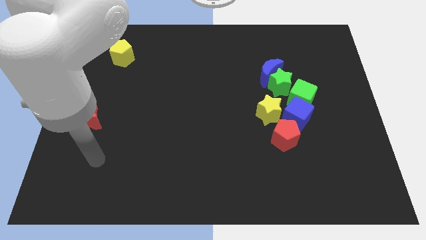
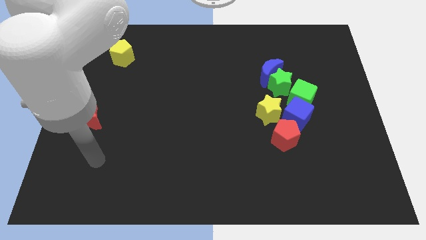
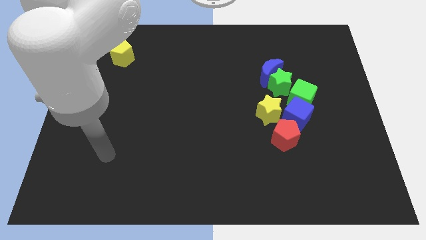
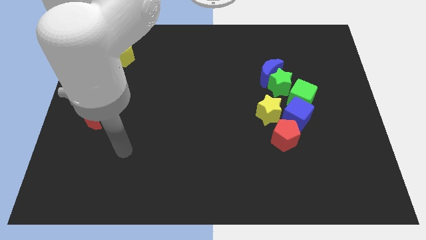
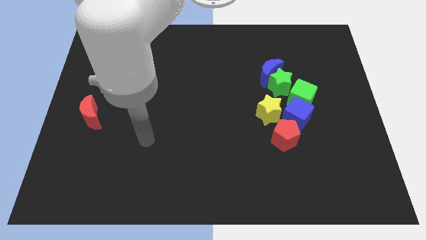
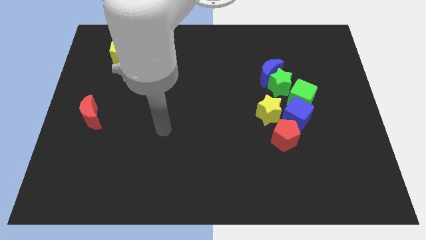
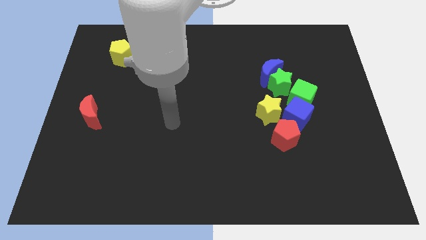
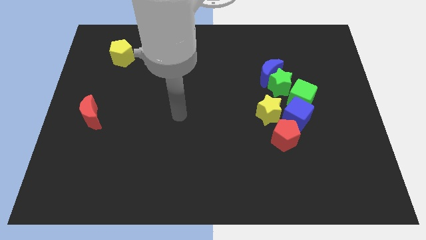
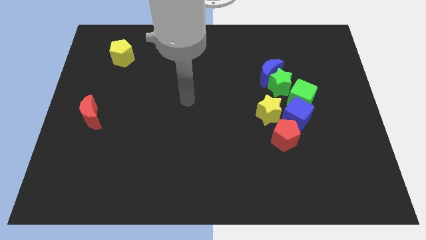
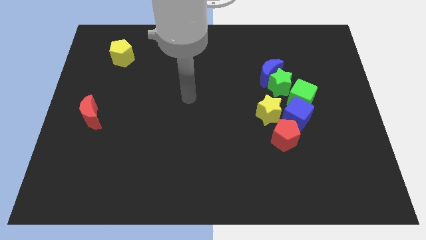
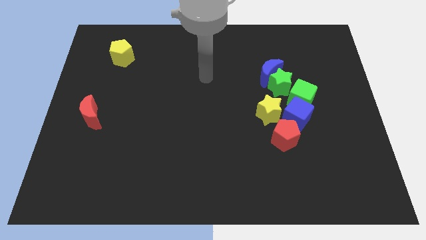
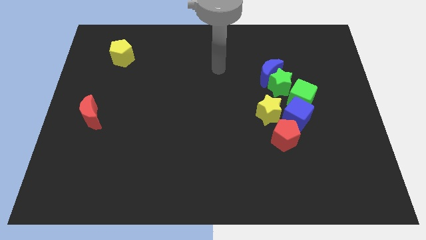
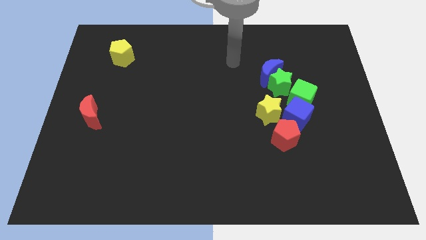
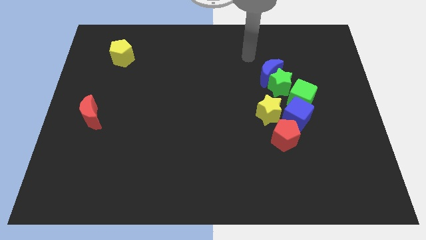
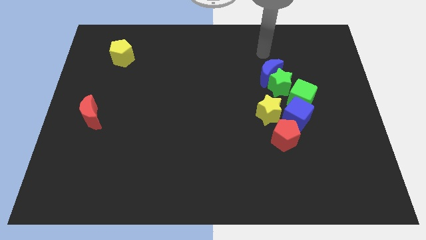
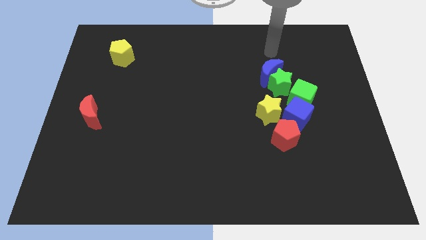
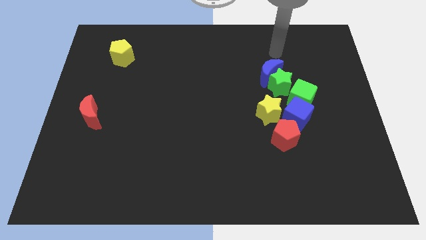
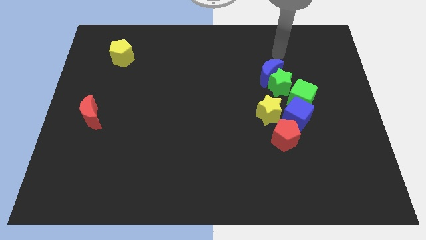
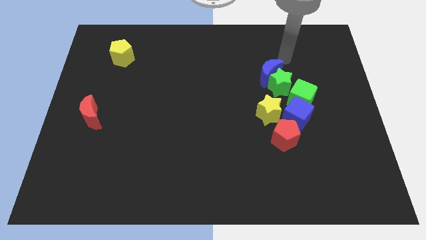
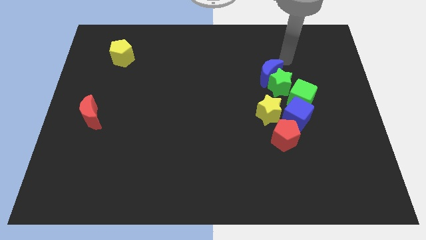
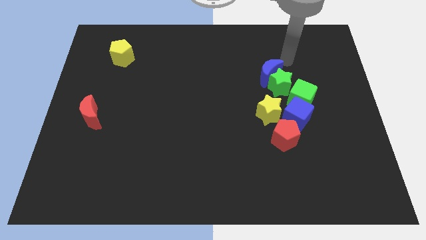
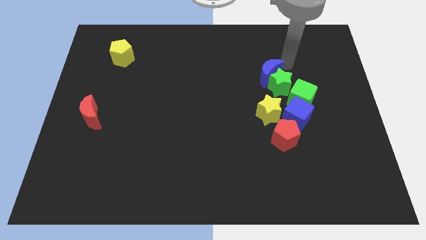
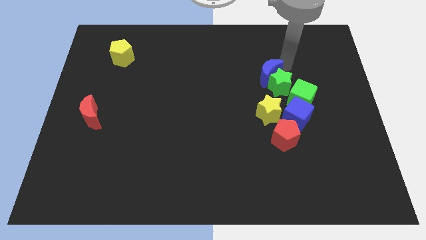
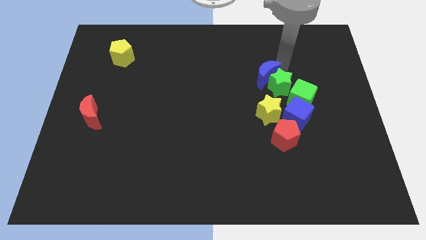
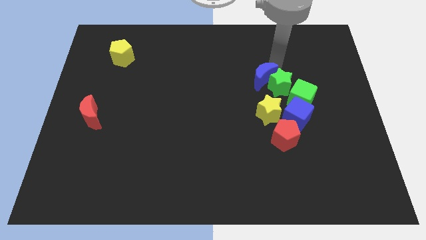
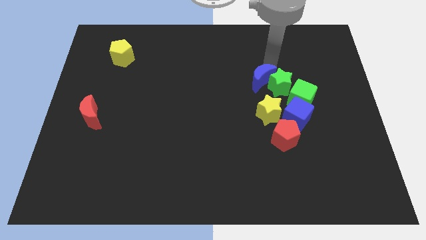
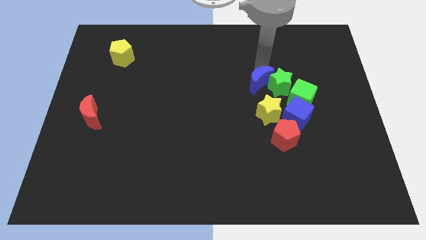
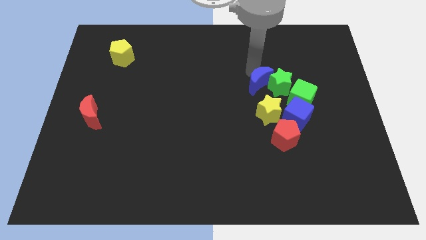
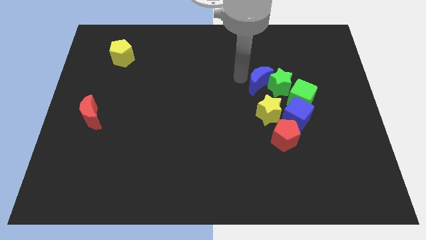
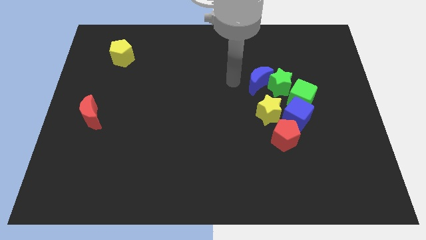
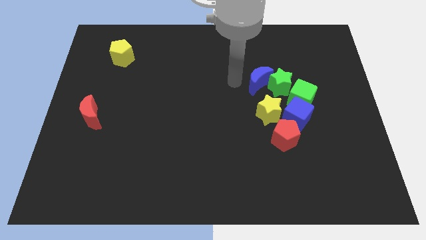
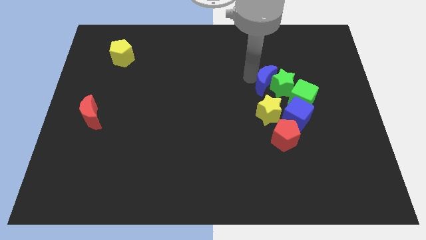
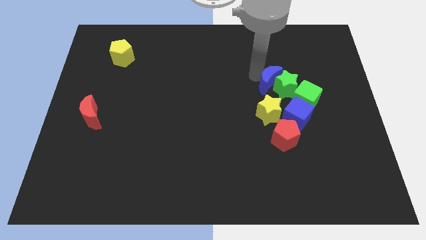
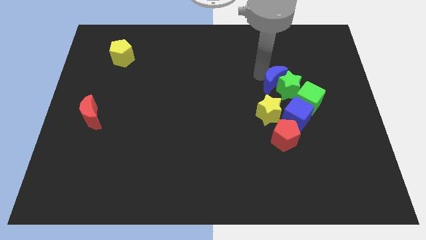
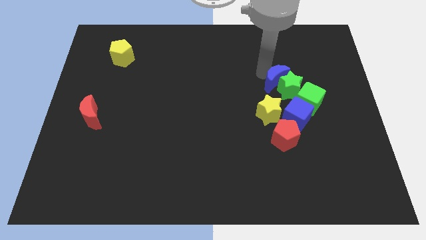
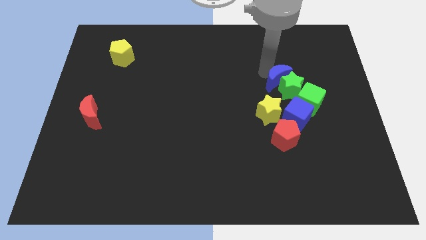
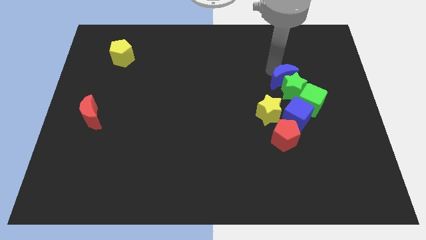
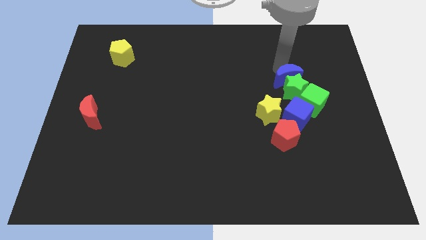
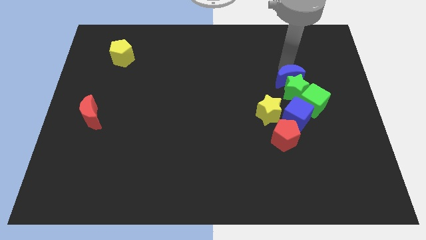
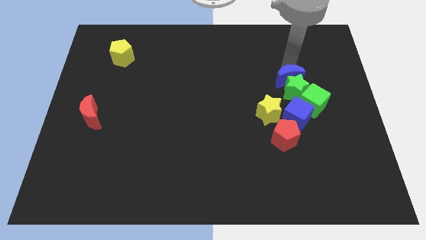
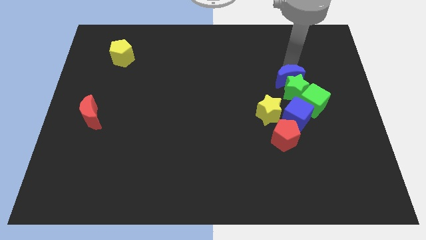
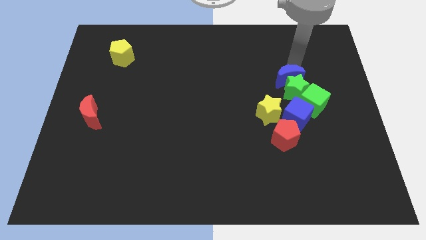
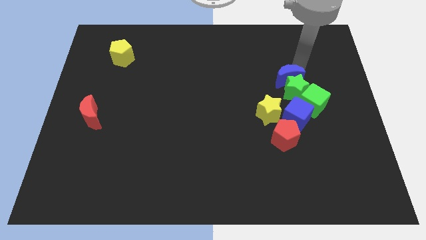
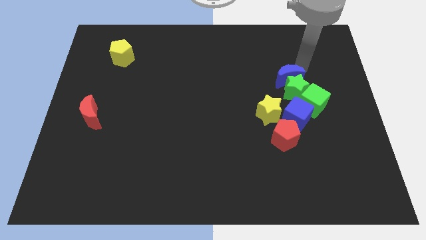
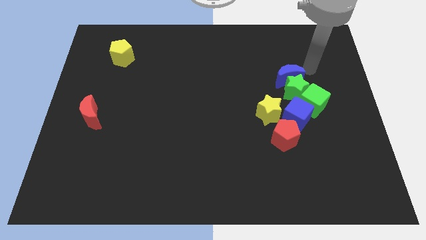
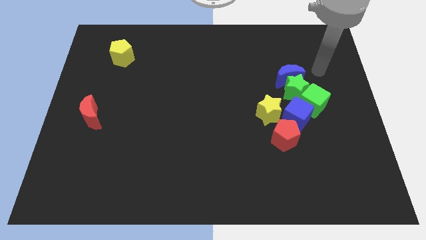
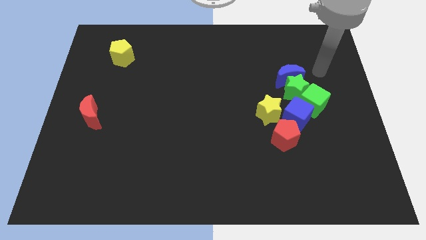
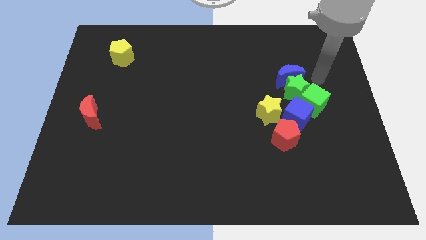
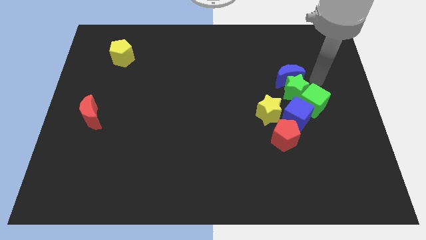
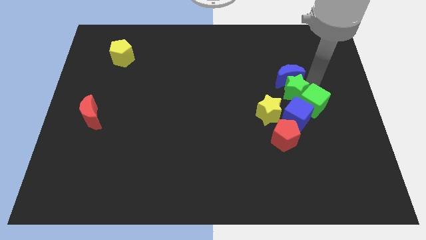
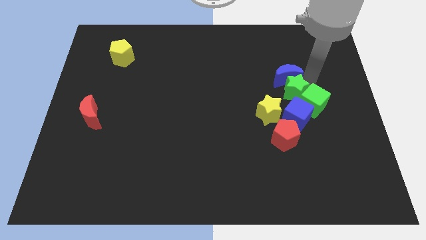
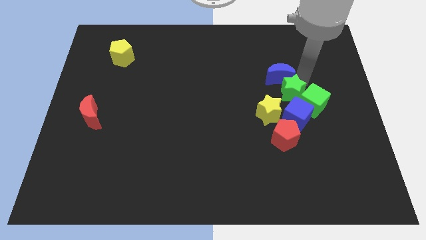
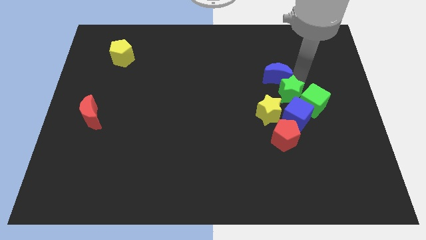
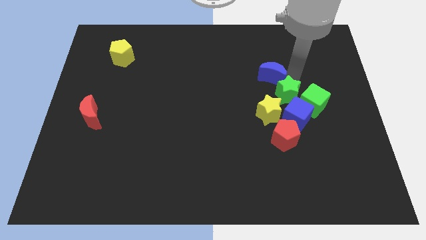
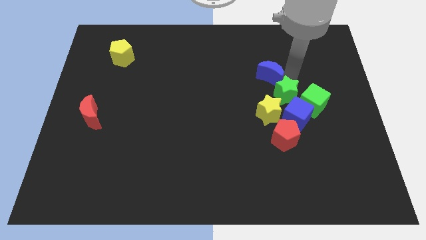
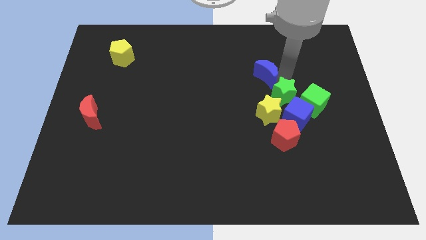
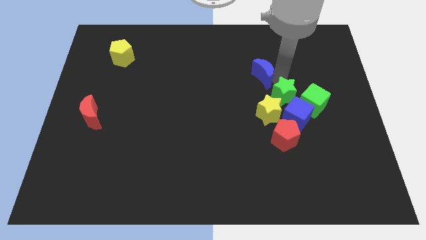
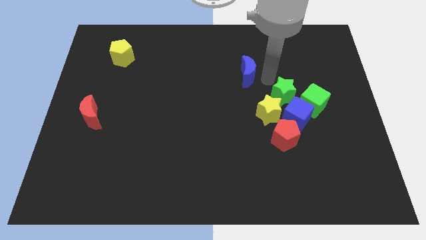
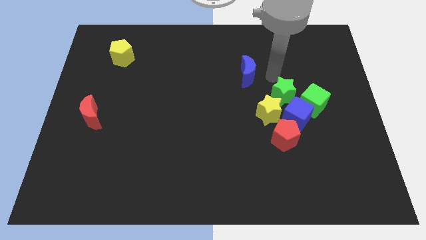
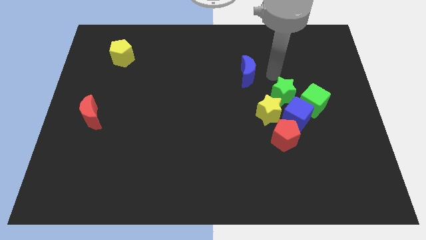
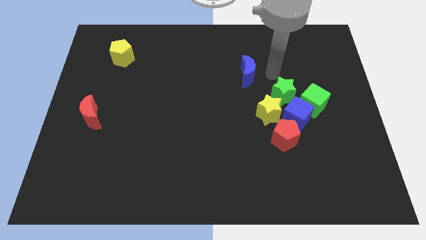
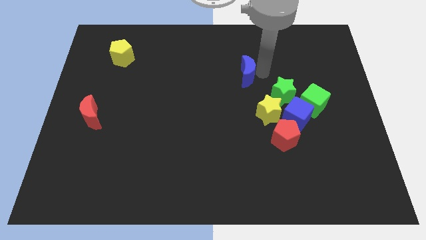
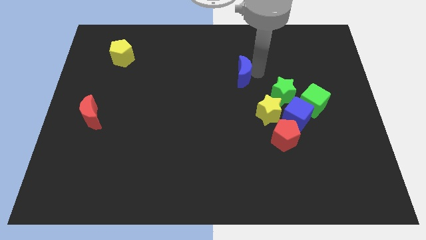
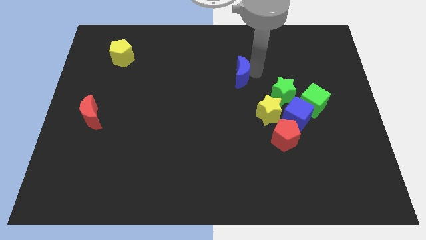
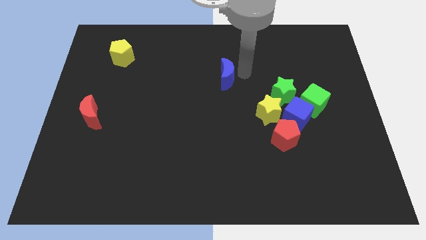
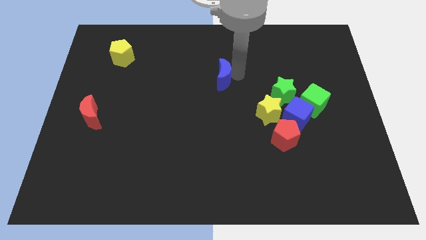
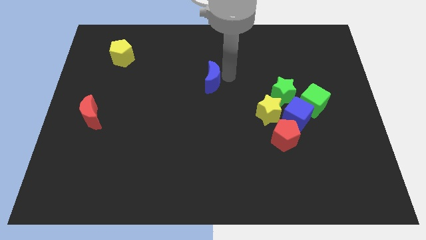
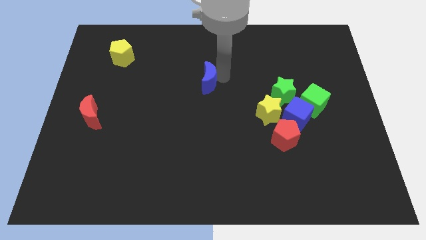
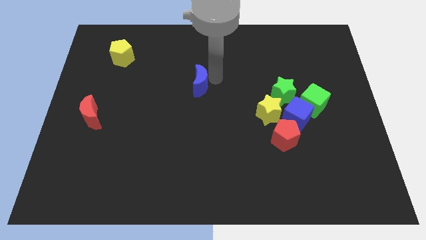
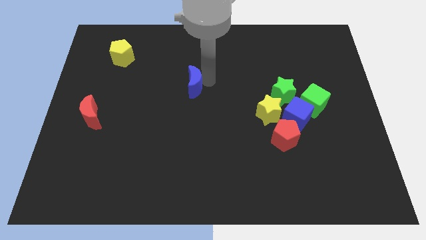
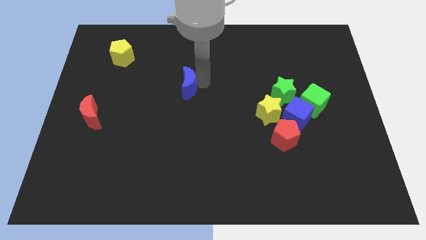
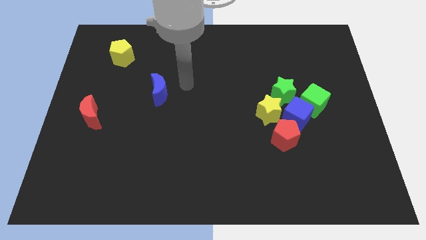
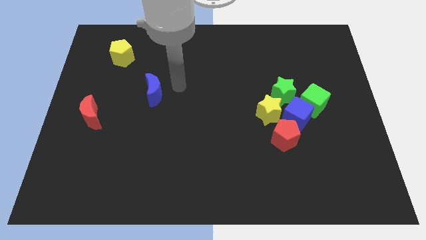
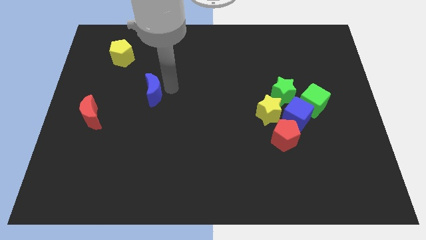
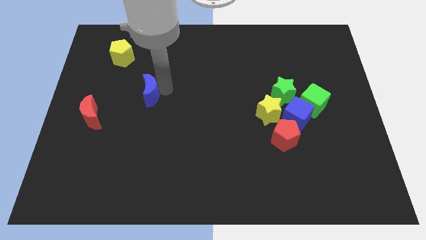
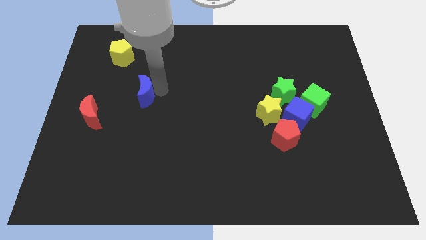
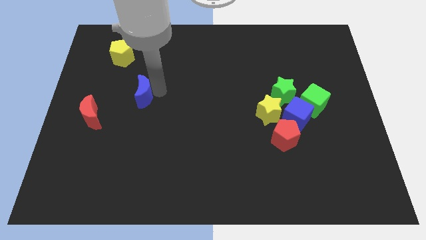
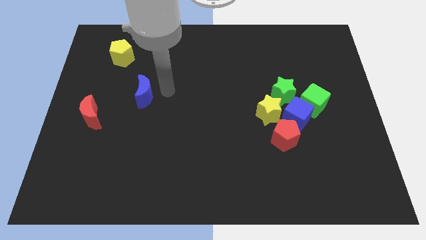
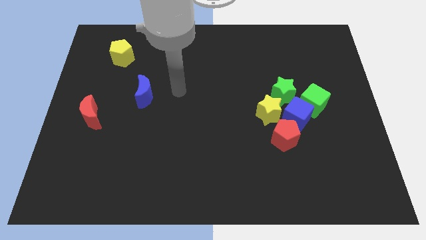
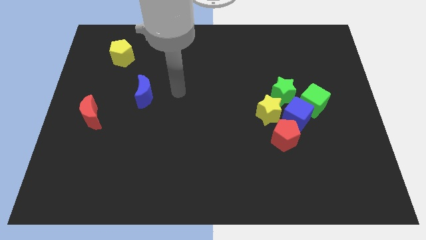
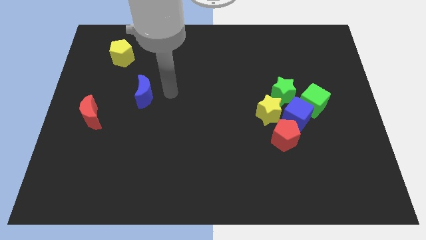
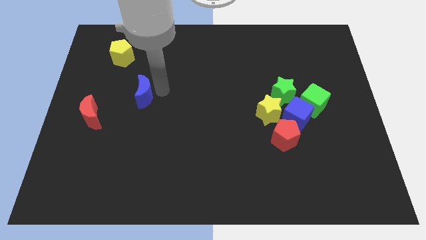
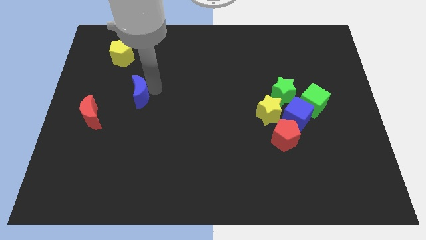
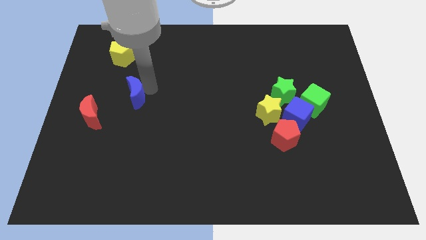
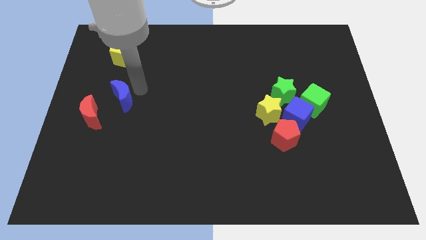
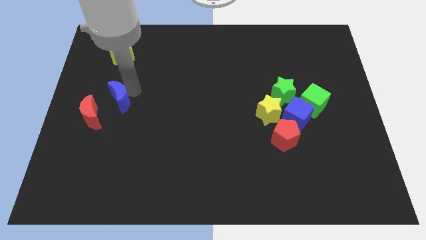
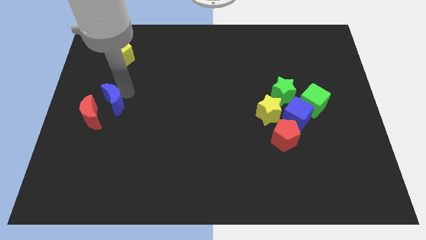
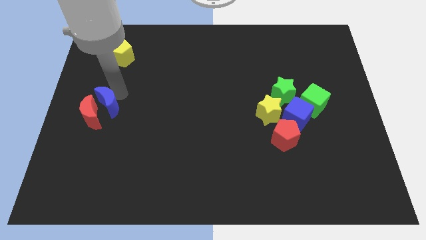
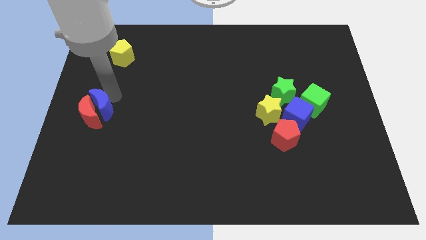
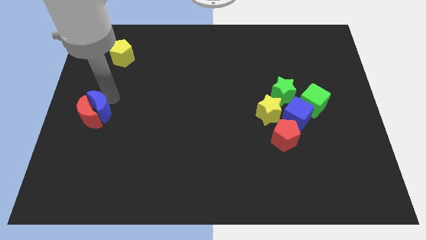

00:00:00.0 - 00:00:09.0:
move the blue moon to the red moon
